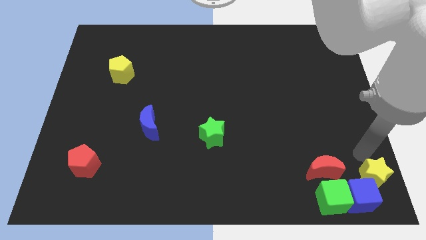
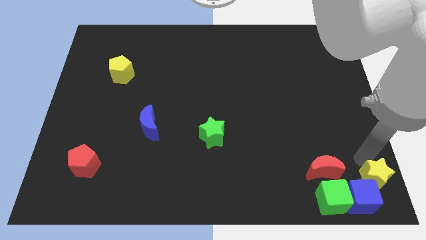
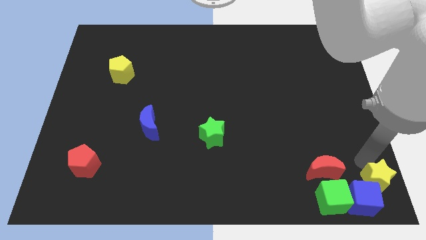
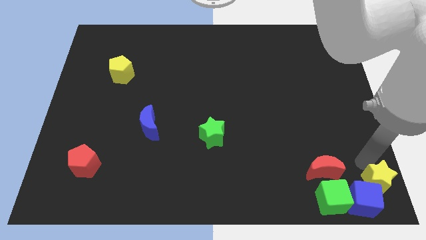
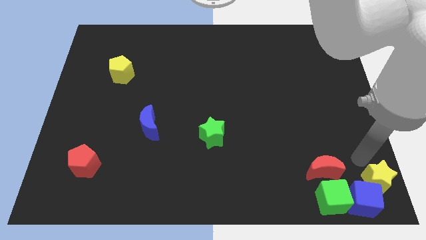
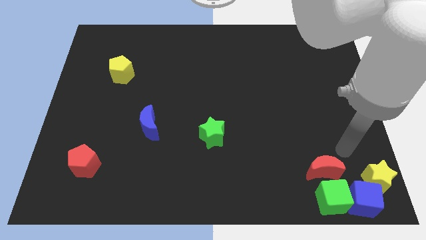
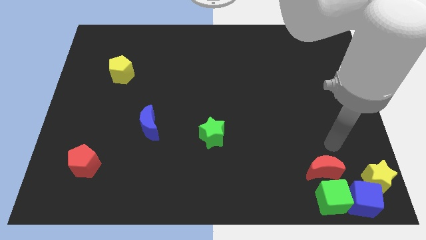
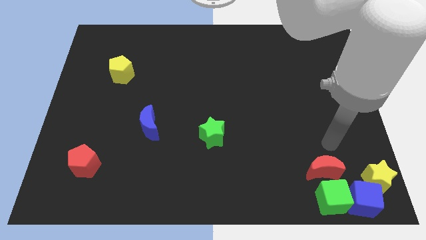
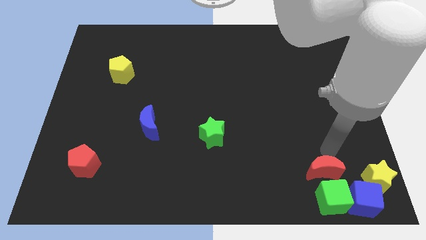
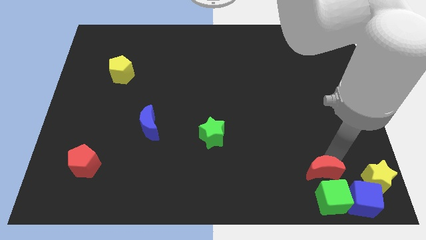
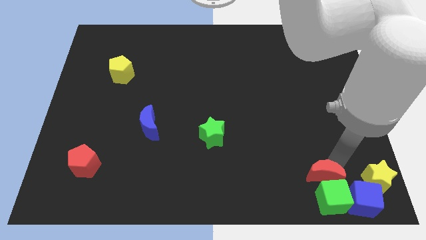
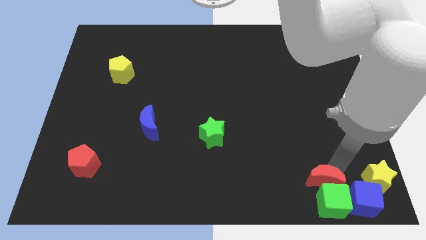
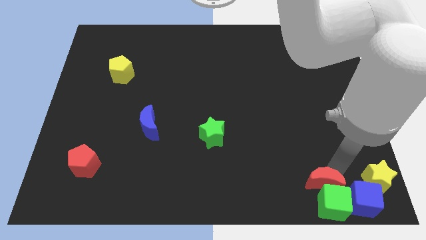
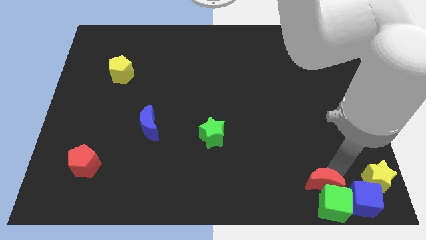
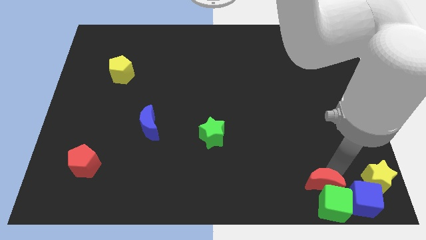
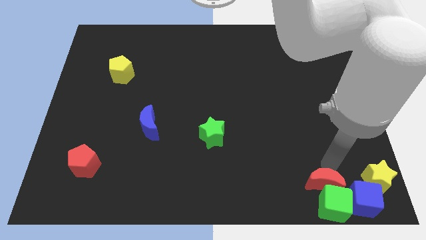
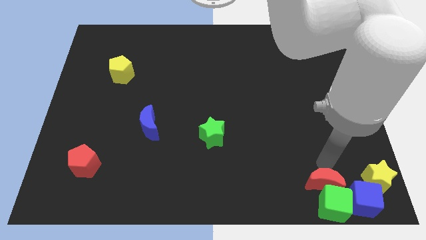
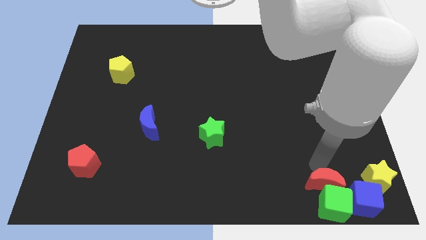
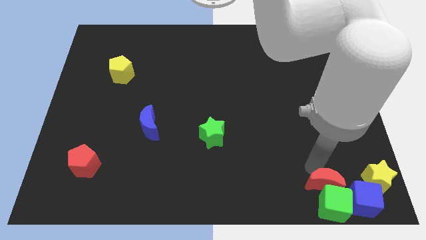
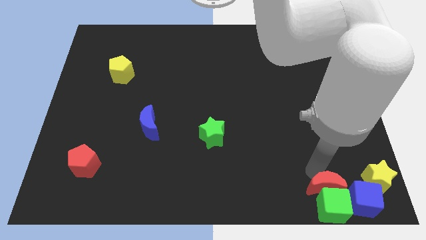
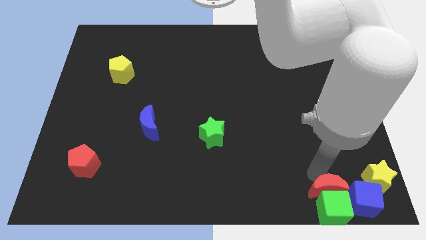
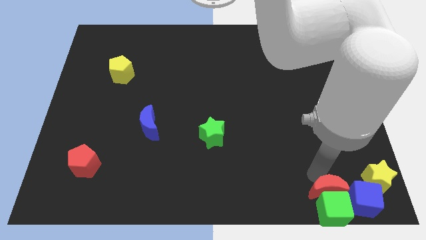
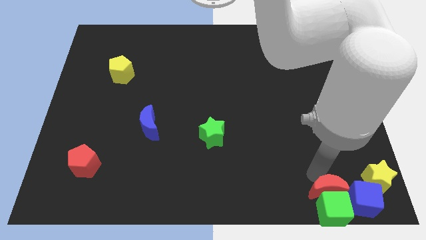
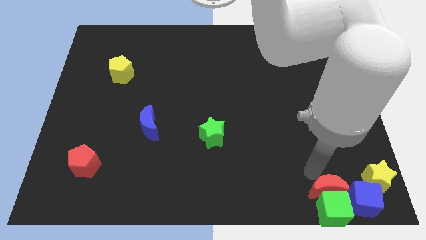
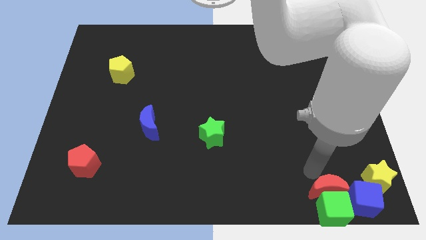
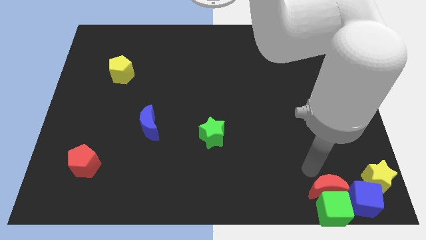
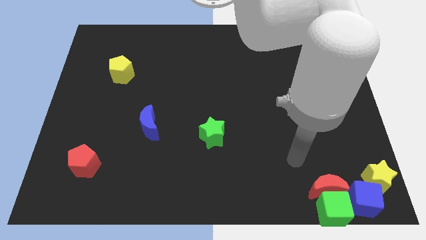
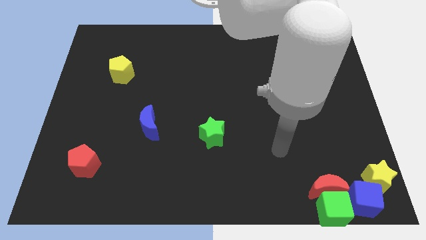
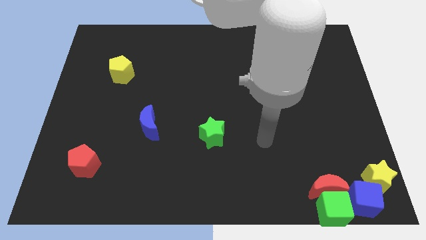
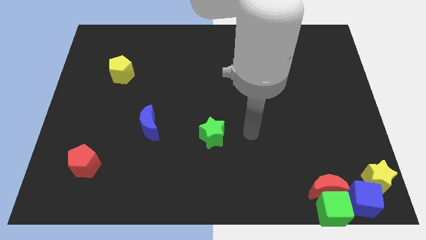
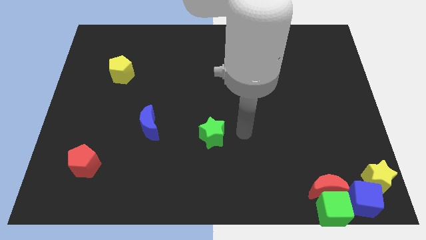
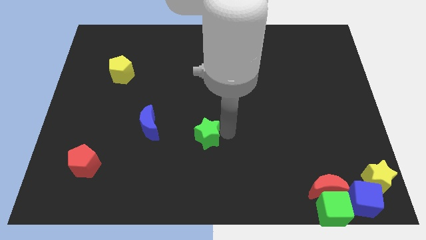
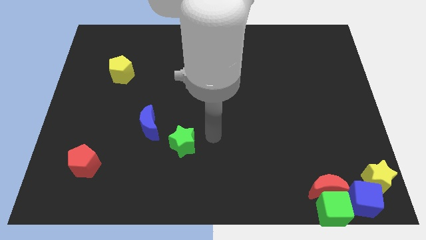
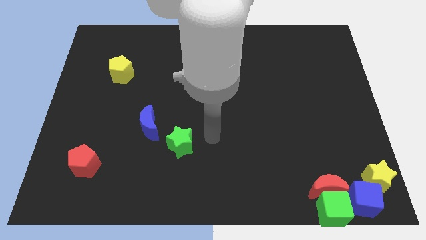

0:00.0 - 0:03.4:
push the red moon into the green cube

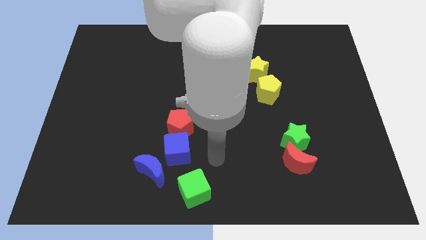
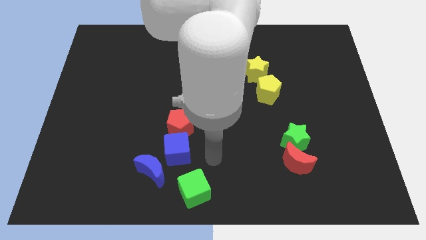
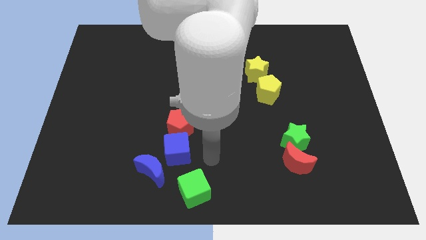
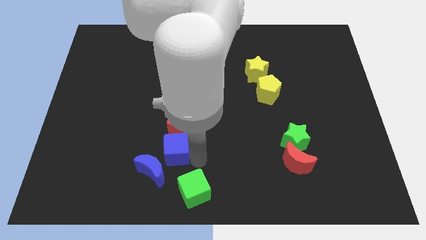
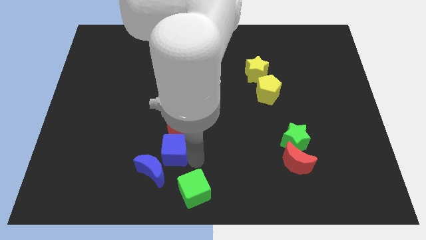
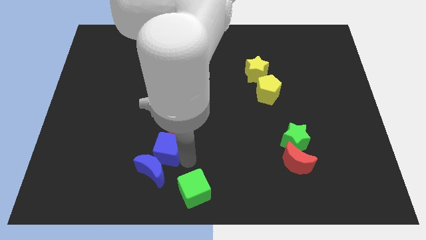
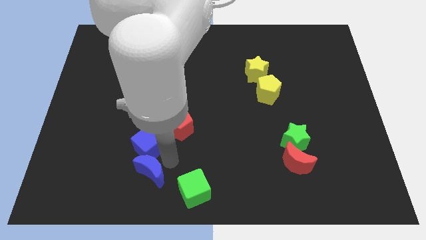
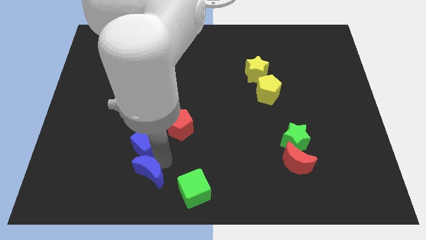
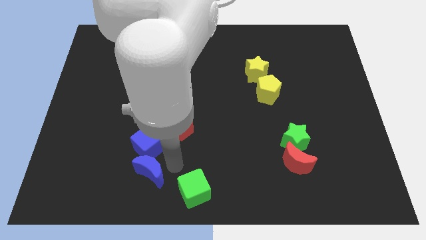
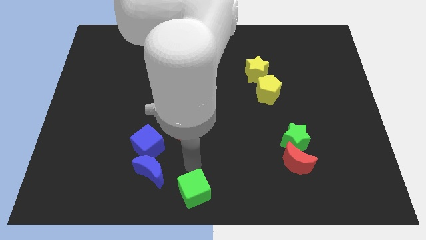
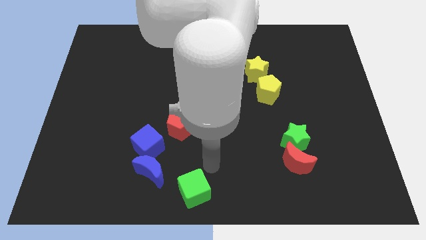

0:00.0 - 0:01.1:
move the blue cube to the top side of the blue moon

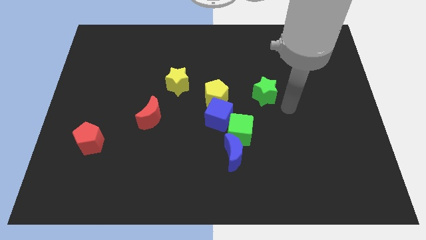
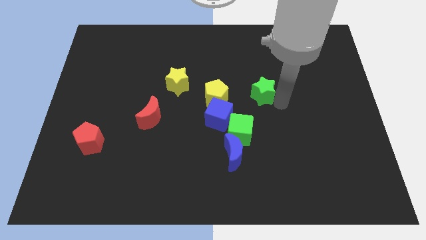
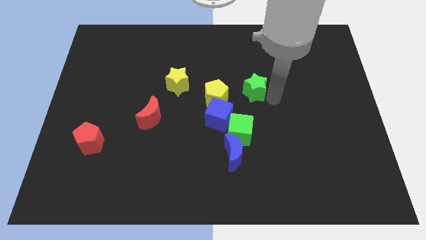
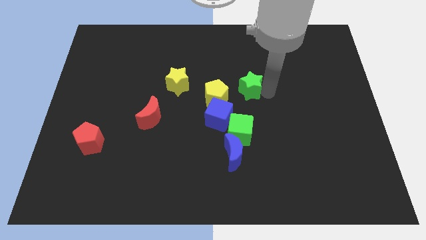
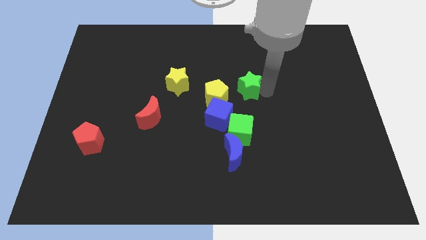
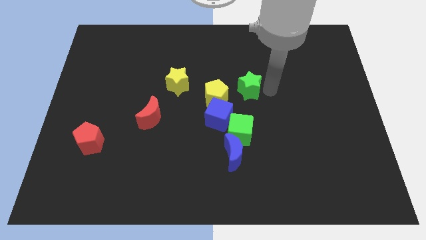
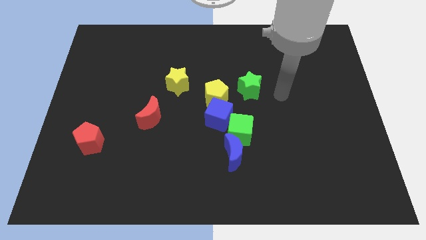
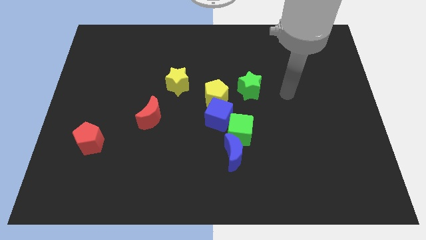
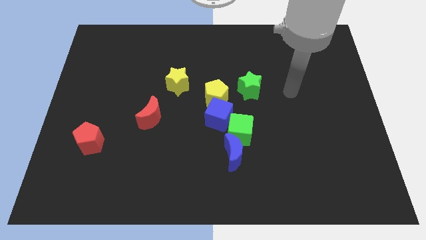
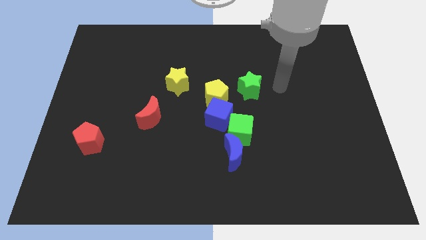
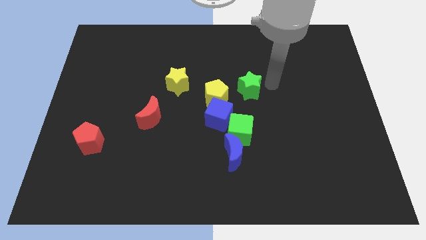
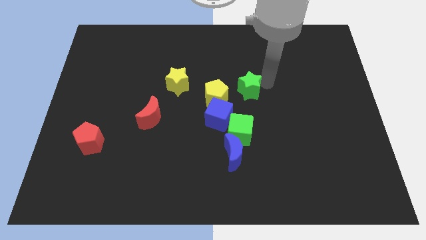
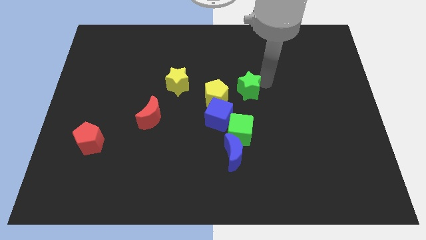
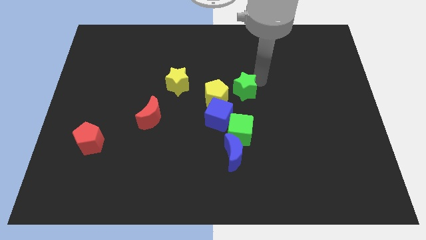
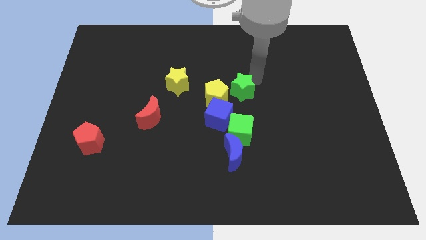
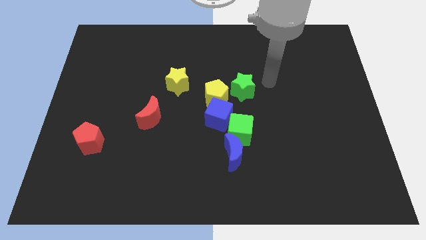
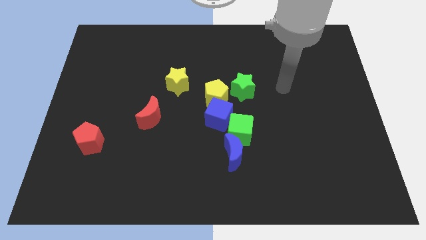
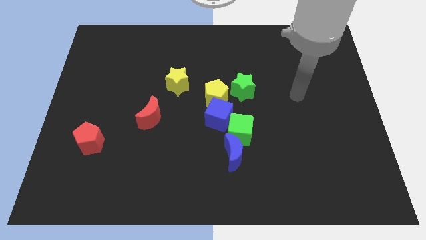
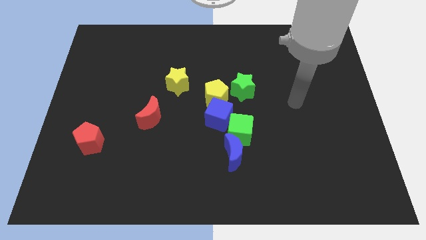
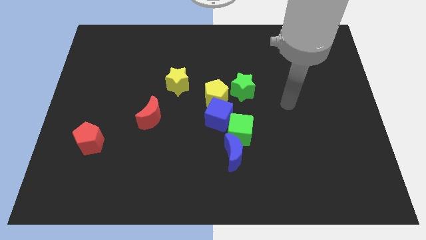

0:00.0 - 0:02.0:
slide the green star vertically above the green cube

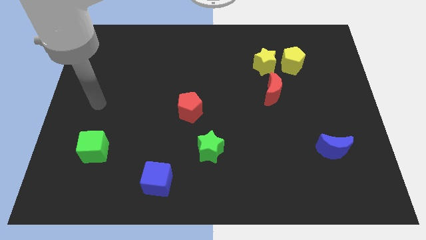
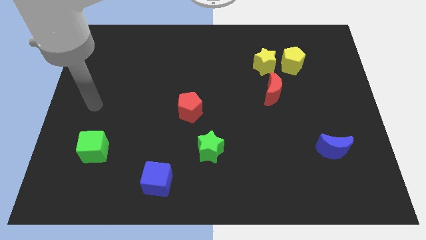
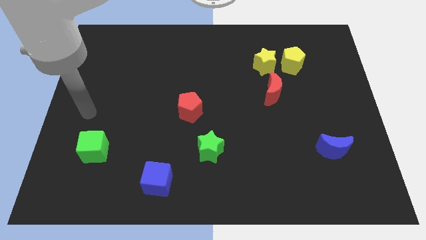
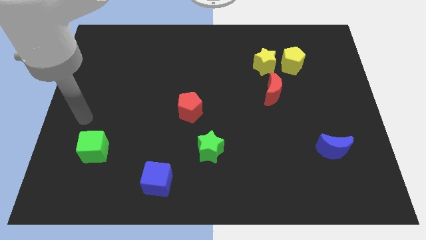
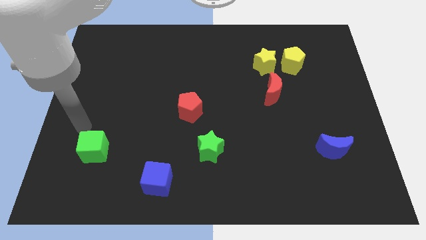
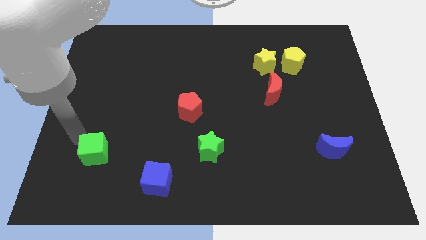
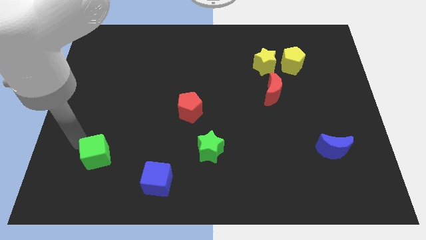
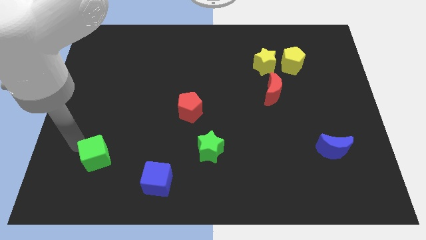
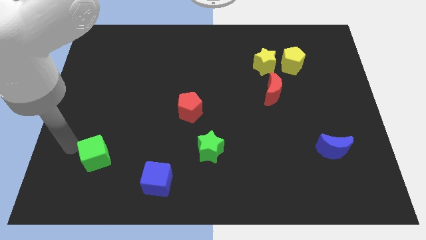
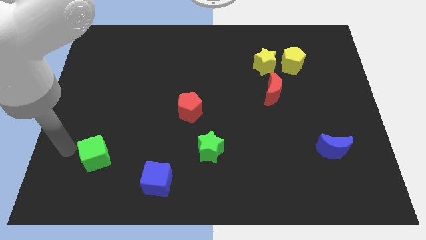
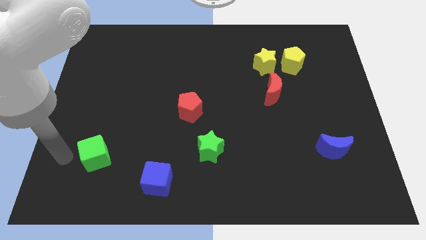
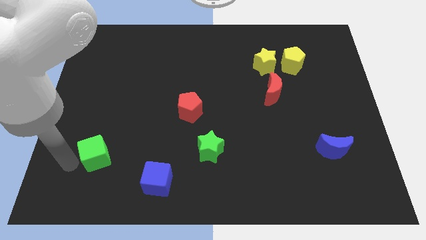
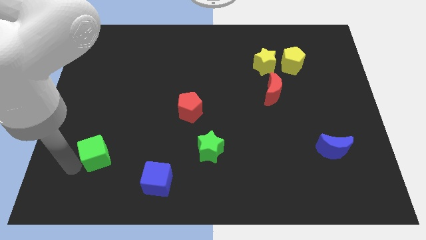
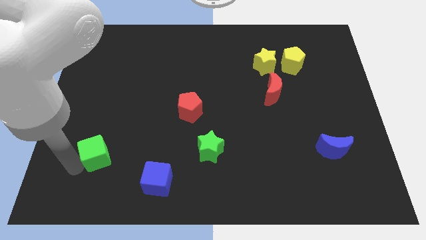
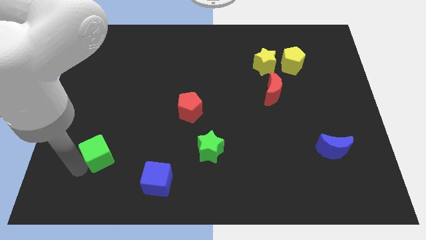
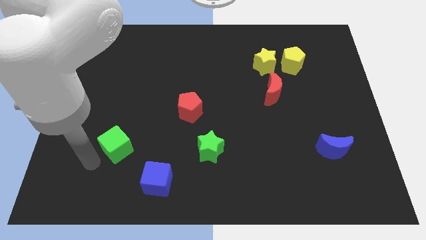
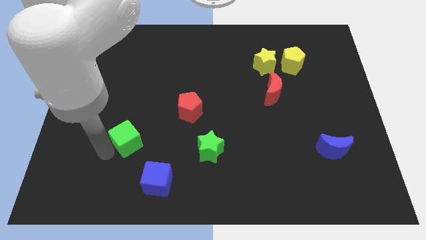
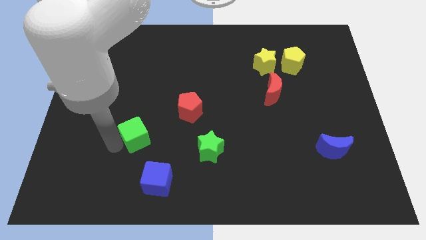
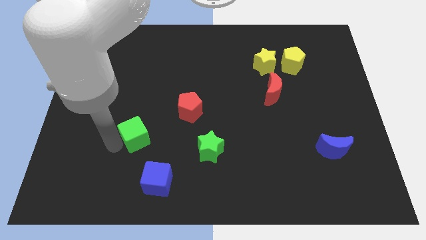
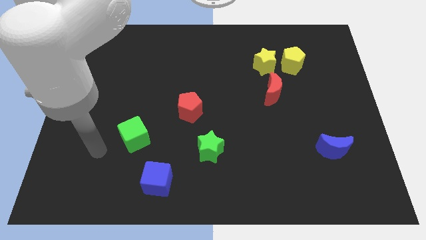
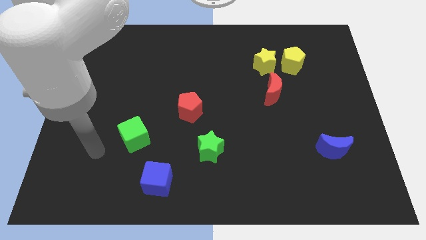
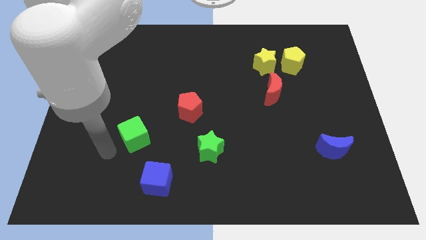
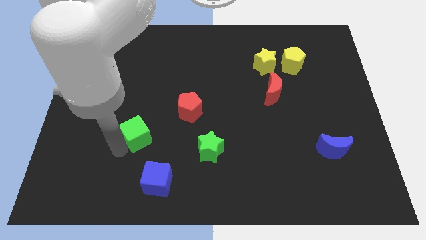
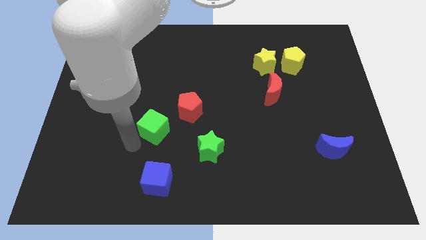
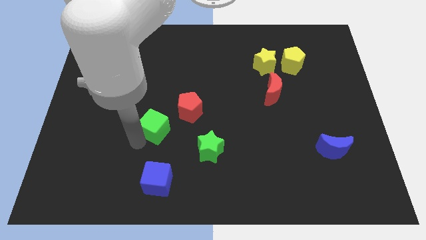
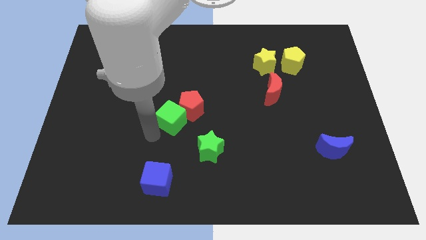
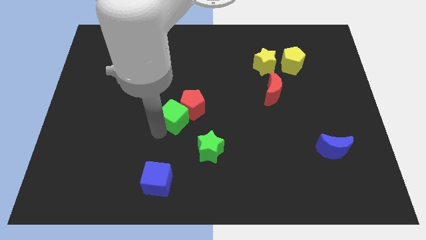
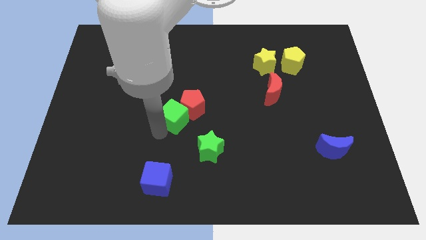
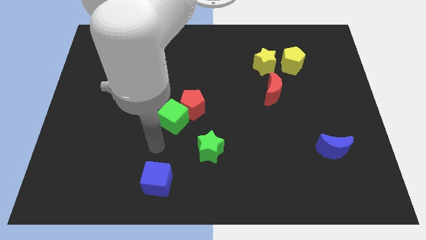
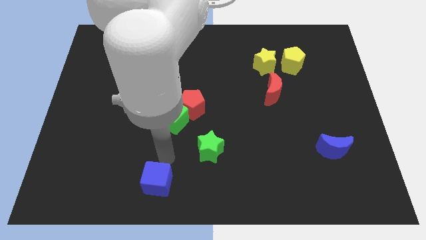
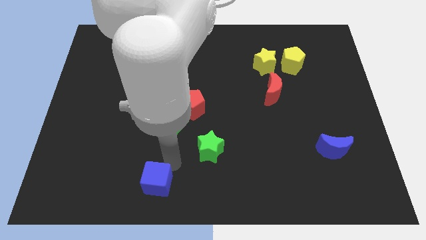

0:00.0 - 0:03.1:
push the green cube into red pentagon
